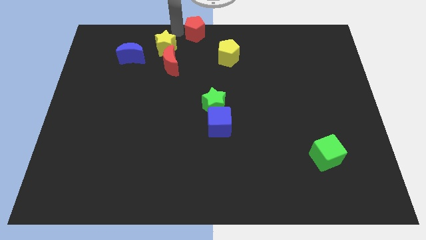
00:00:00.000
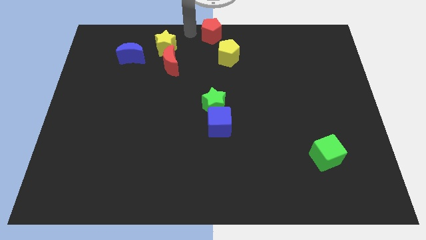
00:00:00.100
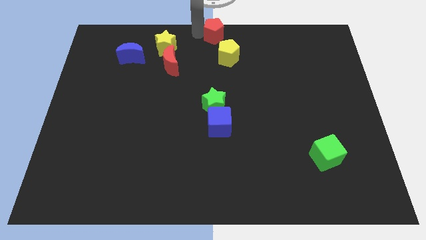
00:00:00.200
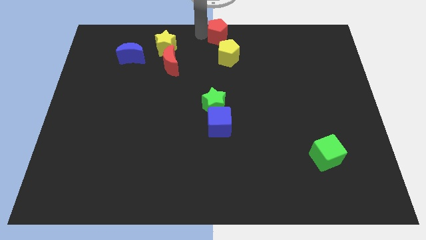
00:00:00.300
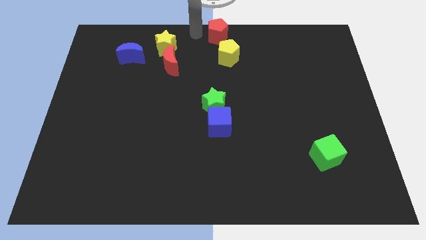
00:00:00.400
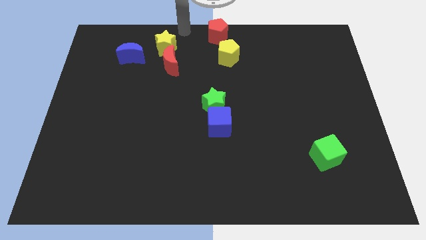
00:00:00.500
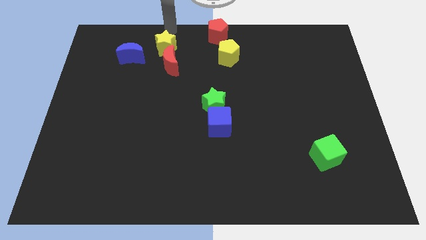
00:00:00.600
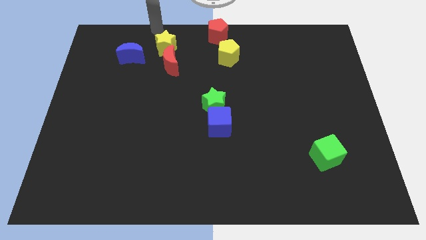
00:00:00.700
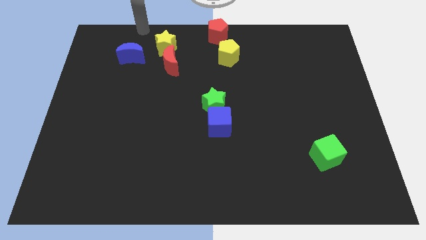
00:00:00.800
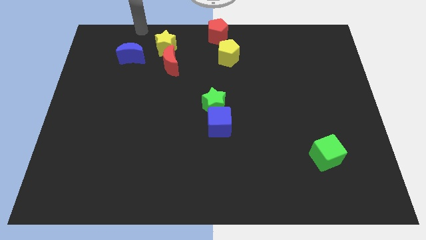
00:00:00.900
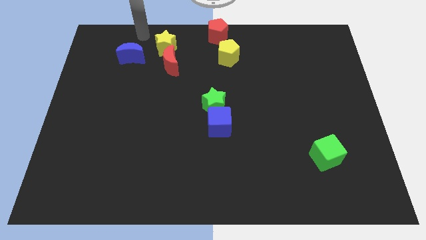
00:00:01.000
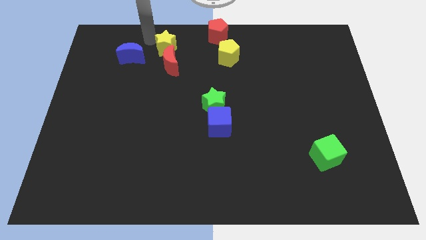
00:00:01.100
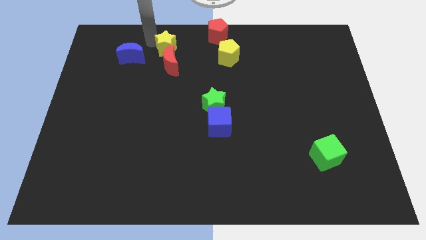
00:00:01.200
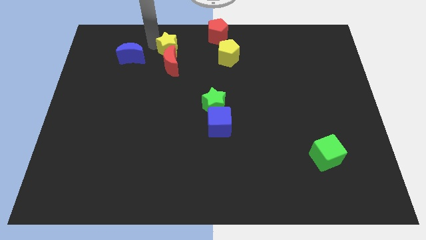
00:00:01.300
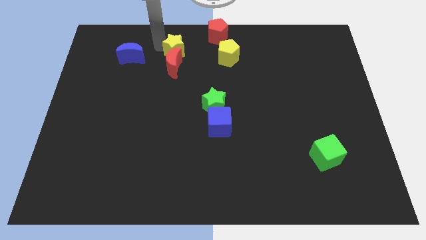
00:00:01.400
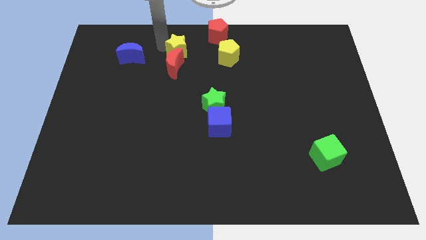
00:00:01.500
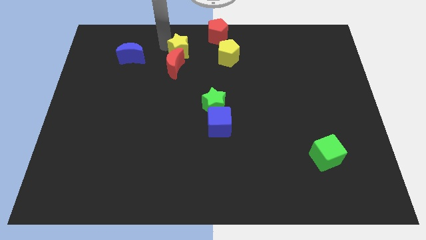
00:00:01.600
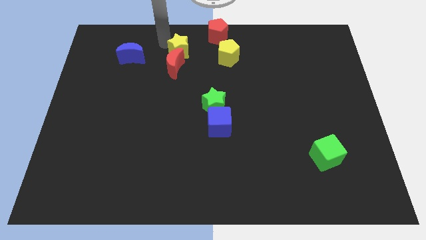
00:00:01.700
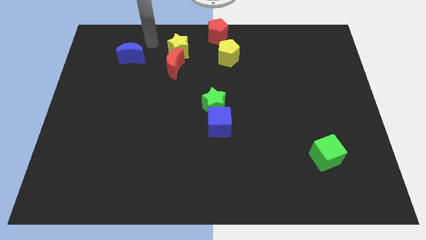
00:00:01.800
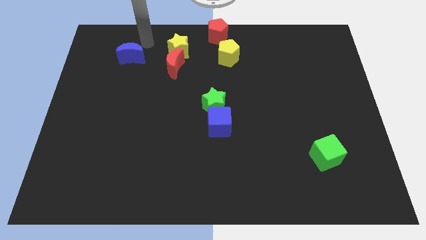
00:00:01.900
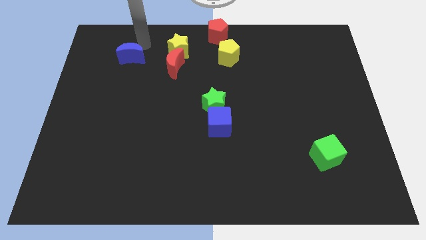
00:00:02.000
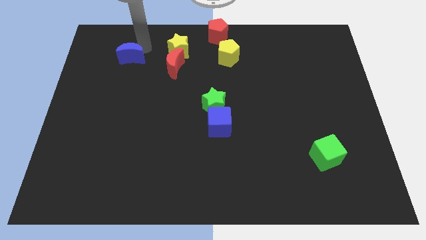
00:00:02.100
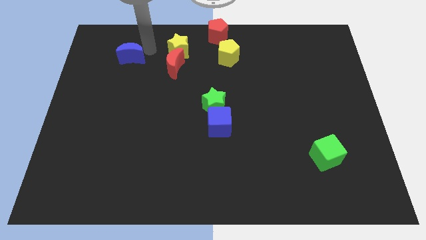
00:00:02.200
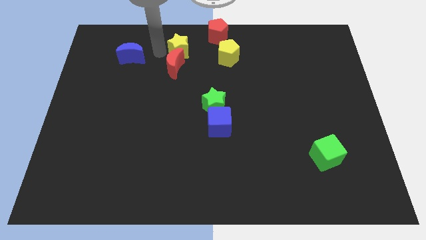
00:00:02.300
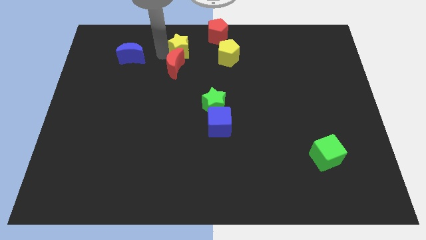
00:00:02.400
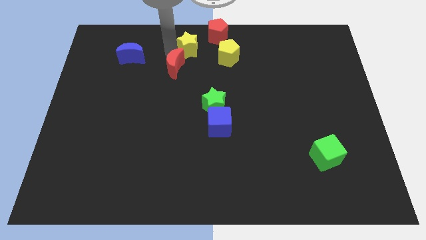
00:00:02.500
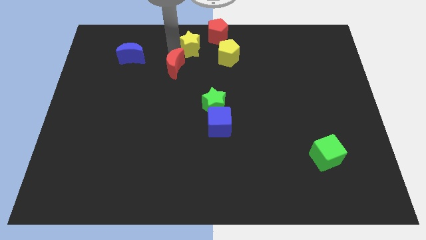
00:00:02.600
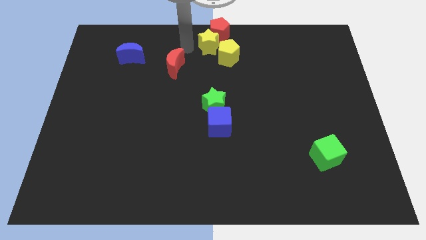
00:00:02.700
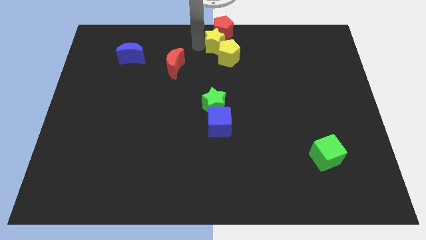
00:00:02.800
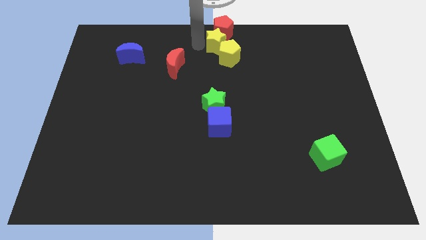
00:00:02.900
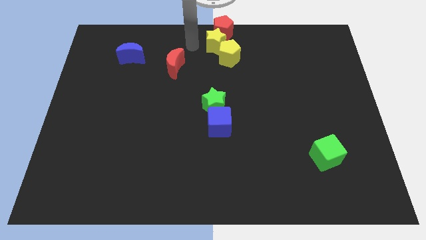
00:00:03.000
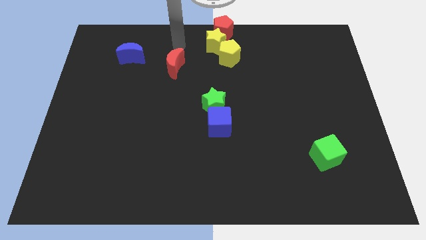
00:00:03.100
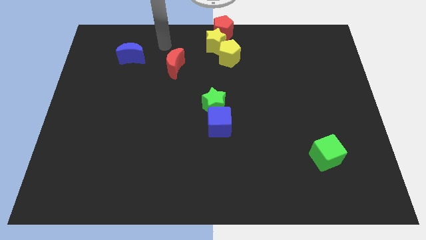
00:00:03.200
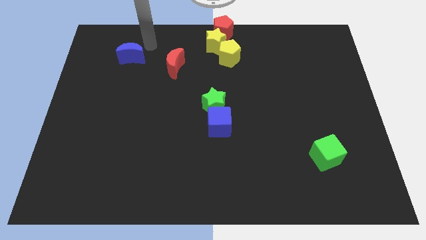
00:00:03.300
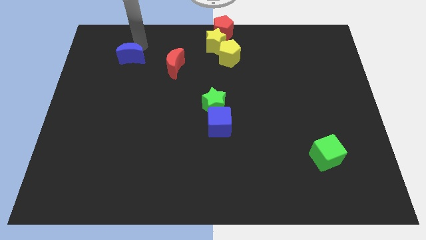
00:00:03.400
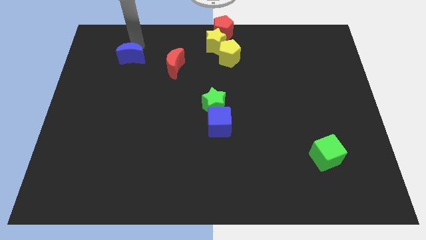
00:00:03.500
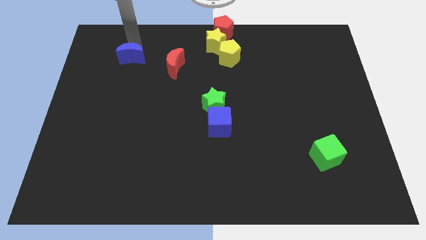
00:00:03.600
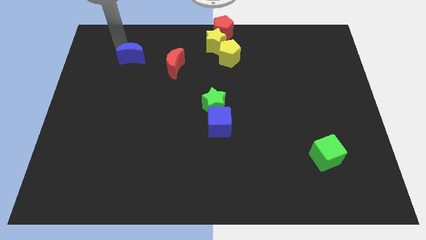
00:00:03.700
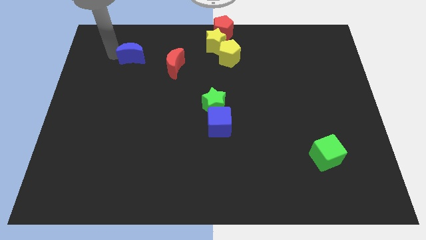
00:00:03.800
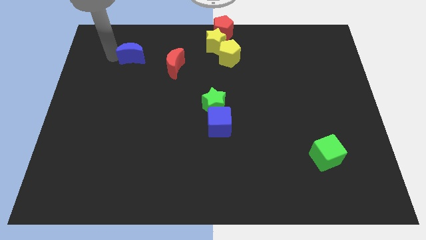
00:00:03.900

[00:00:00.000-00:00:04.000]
push the red pentagon towards the top center of the board

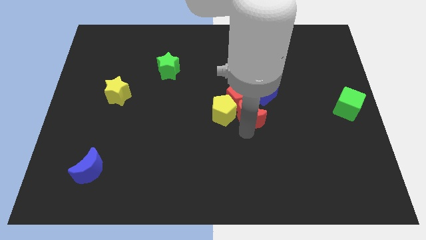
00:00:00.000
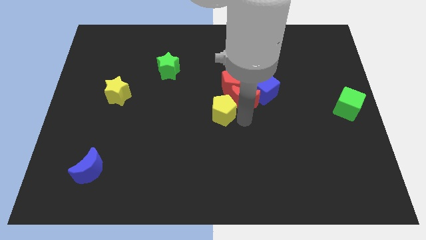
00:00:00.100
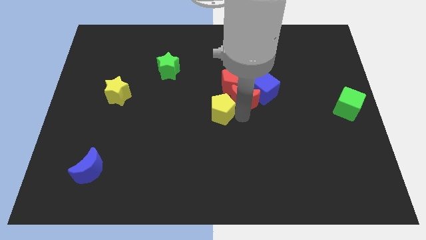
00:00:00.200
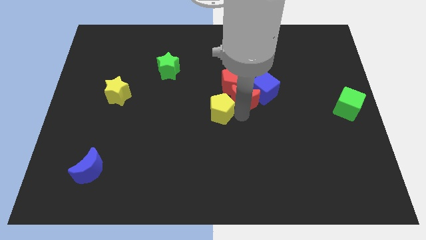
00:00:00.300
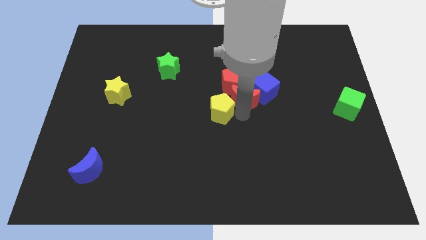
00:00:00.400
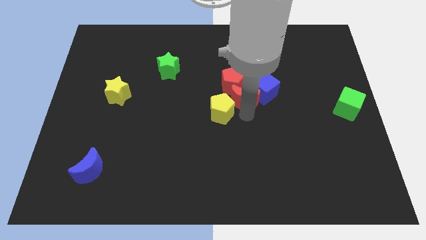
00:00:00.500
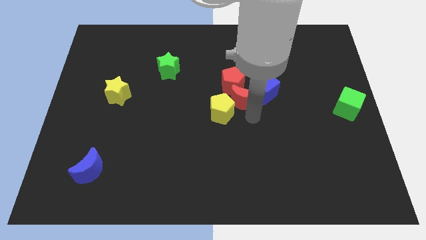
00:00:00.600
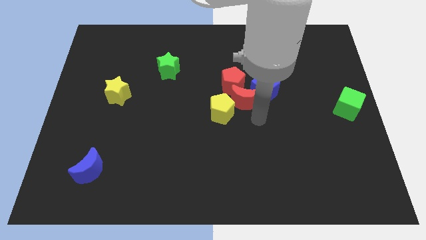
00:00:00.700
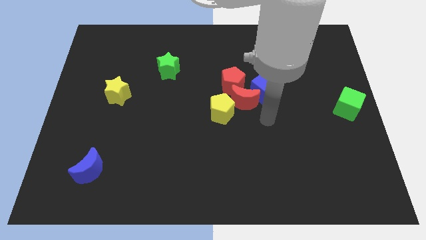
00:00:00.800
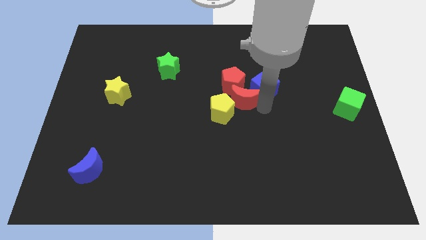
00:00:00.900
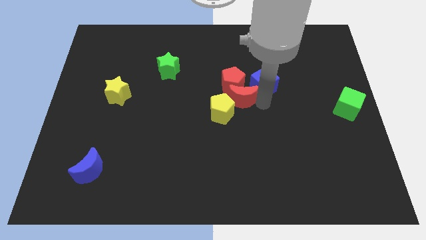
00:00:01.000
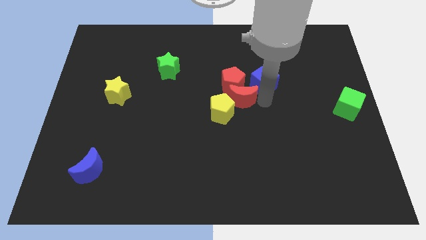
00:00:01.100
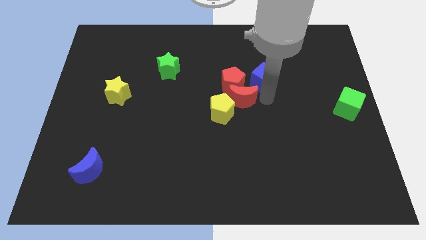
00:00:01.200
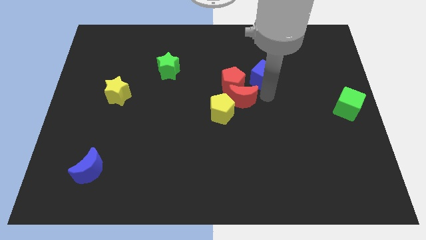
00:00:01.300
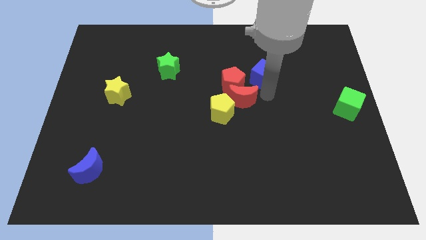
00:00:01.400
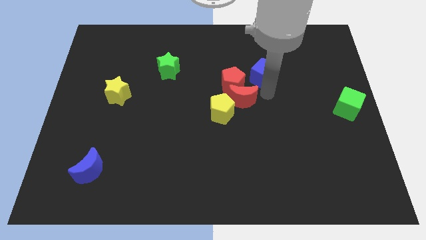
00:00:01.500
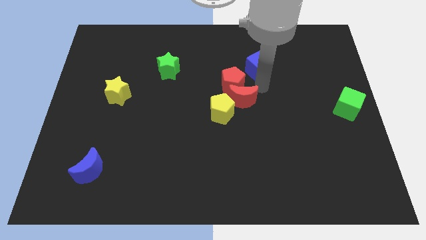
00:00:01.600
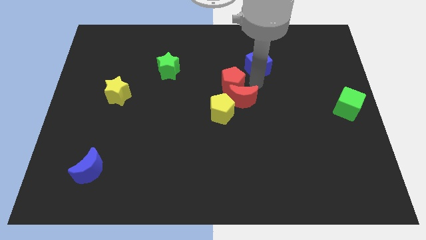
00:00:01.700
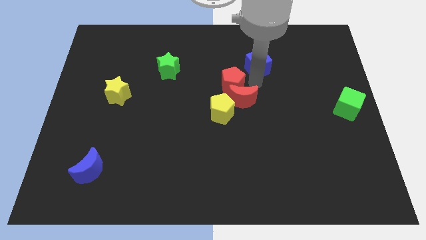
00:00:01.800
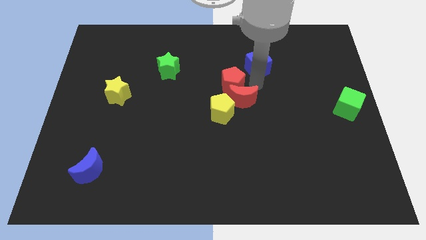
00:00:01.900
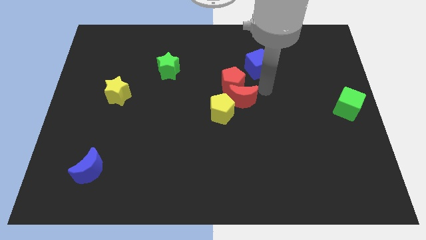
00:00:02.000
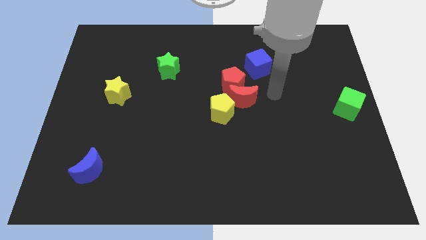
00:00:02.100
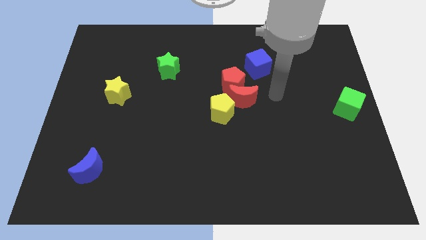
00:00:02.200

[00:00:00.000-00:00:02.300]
move slightly the red crescent with blue cube

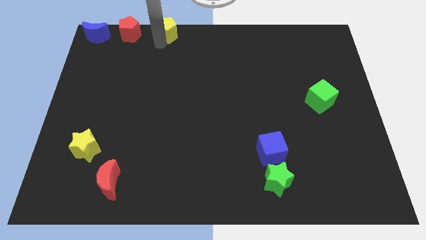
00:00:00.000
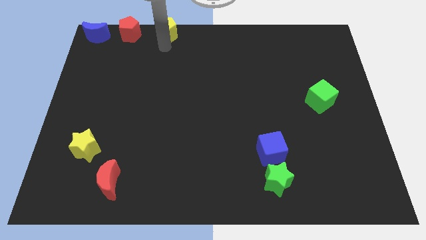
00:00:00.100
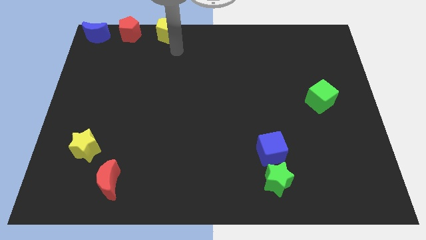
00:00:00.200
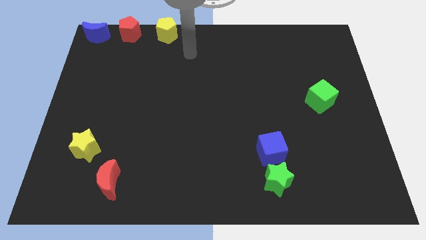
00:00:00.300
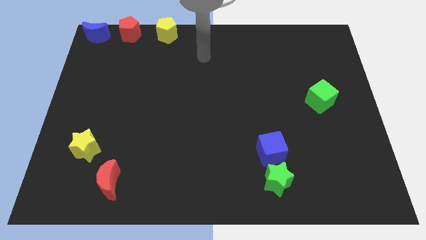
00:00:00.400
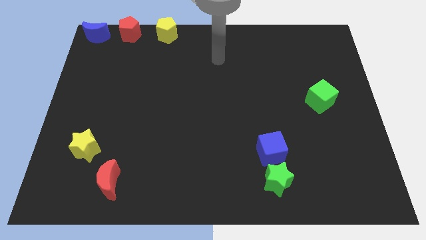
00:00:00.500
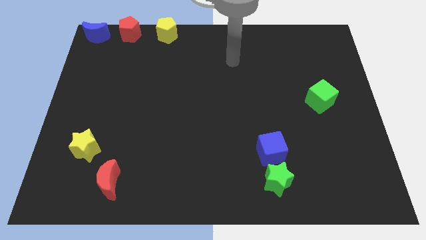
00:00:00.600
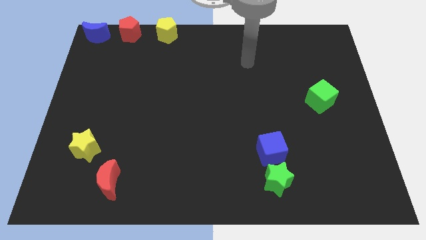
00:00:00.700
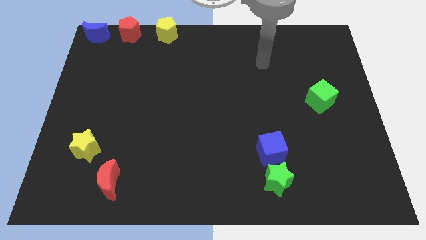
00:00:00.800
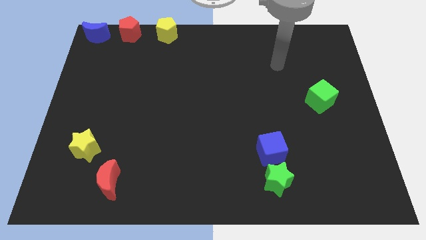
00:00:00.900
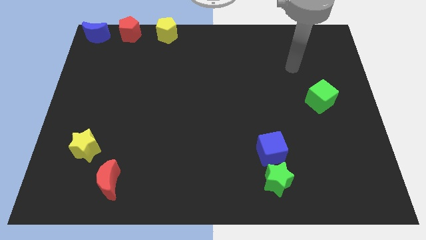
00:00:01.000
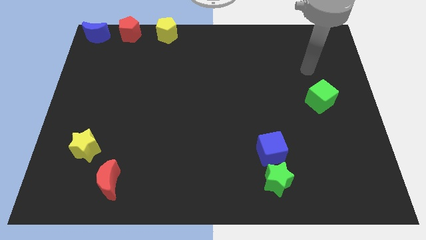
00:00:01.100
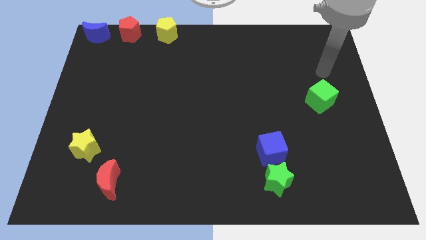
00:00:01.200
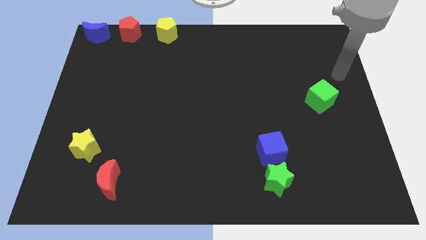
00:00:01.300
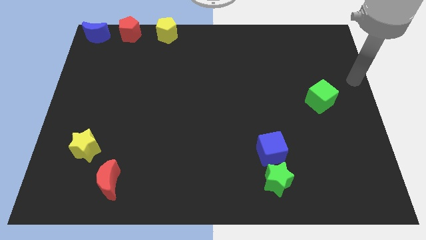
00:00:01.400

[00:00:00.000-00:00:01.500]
move your arm away from the yellow pentagon

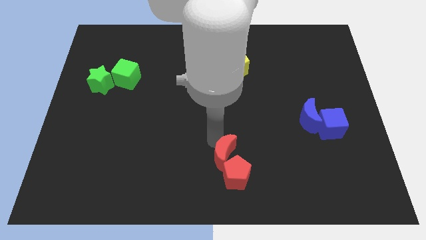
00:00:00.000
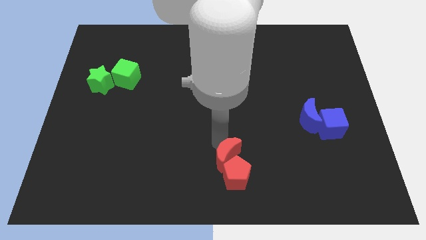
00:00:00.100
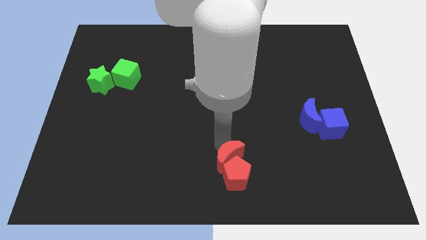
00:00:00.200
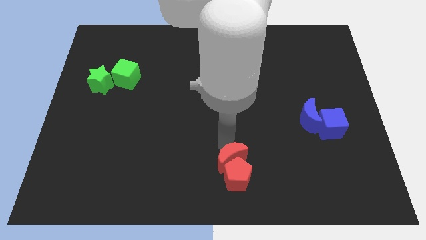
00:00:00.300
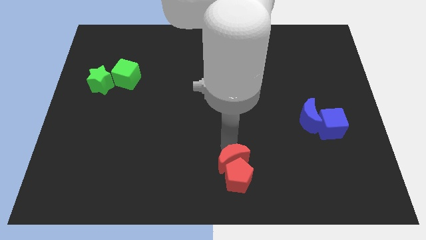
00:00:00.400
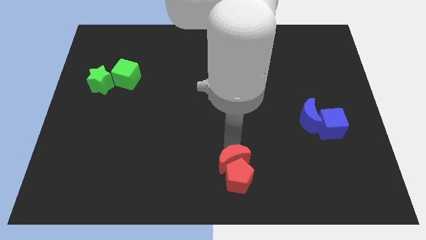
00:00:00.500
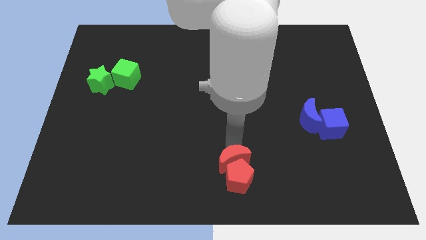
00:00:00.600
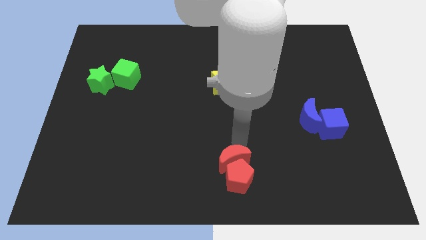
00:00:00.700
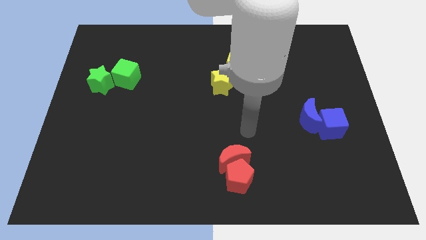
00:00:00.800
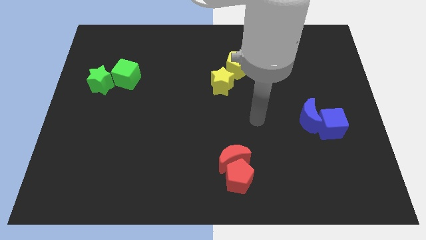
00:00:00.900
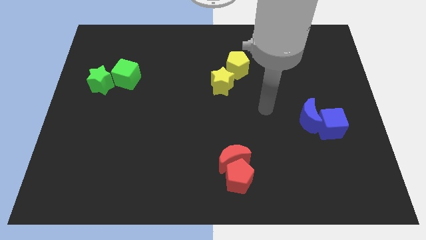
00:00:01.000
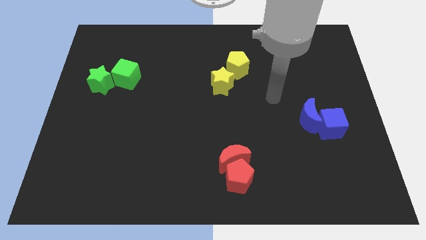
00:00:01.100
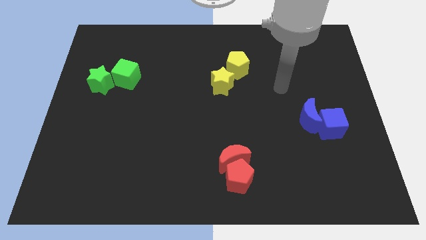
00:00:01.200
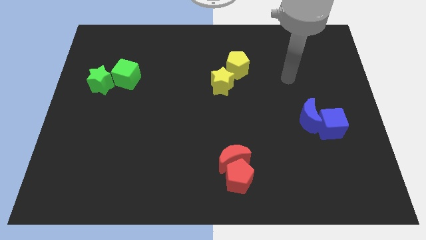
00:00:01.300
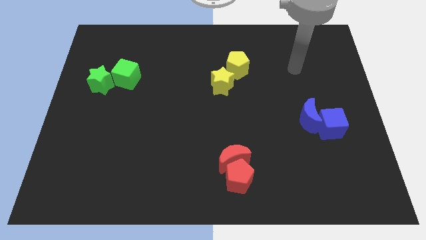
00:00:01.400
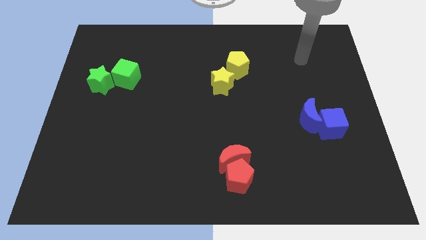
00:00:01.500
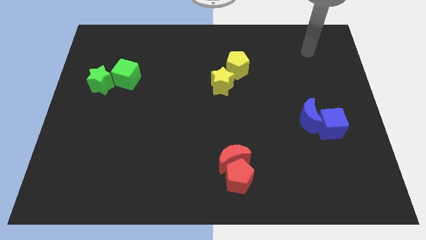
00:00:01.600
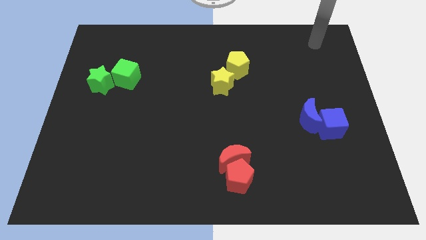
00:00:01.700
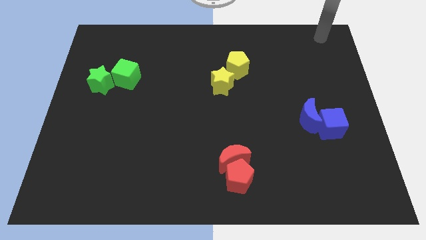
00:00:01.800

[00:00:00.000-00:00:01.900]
move the red crescent above the red pentagon
